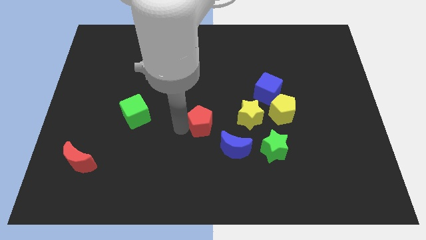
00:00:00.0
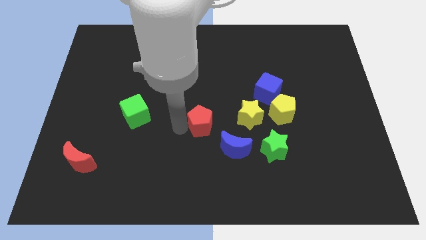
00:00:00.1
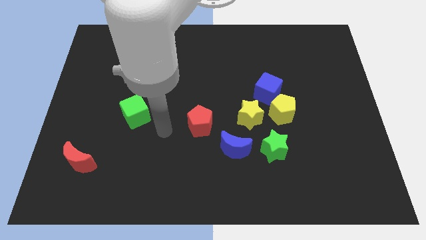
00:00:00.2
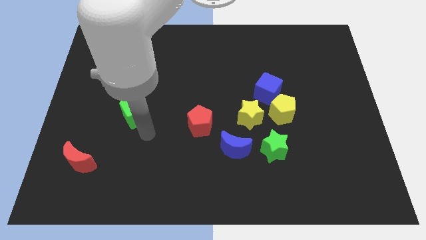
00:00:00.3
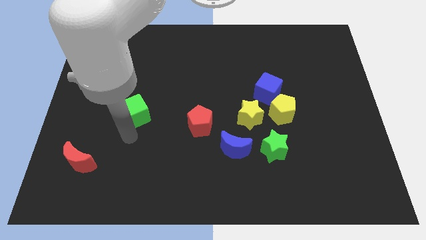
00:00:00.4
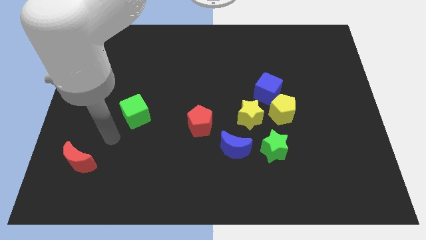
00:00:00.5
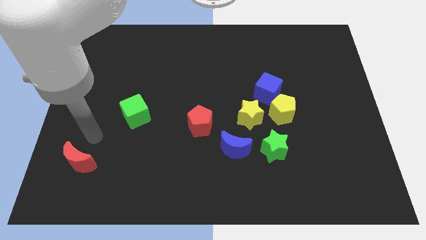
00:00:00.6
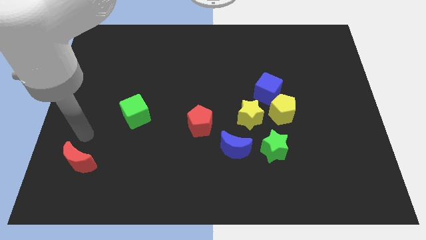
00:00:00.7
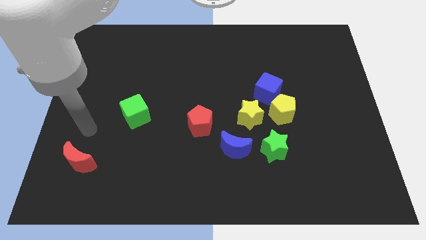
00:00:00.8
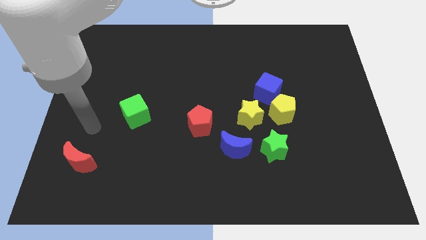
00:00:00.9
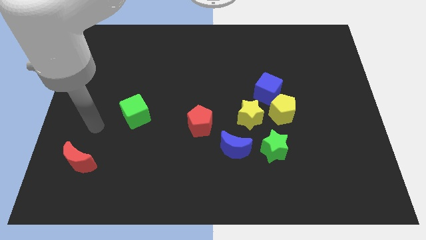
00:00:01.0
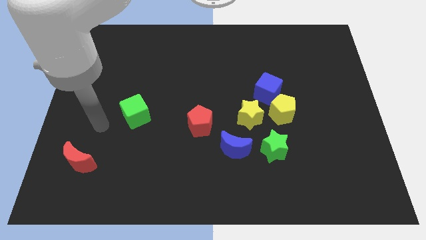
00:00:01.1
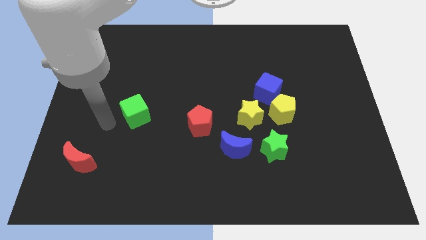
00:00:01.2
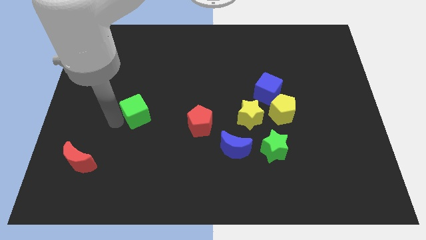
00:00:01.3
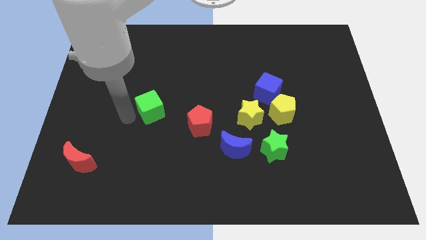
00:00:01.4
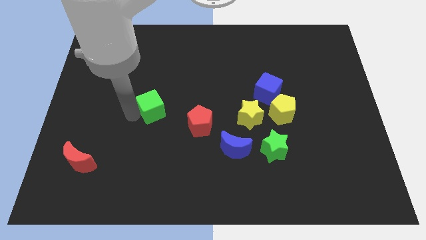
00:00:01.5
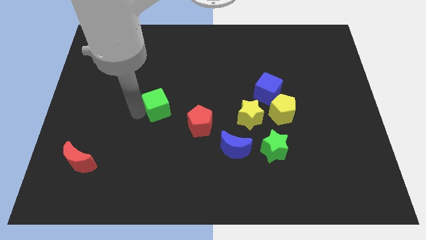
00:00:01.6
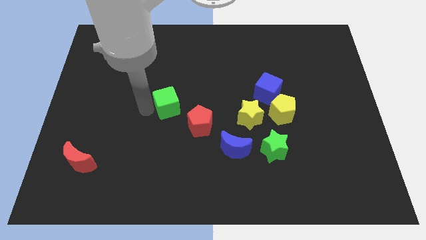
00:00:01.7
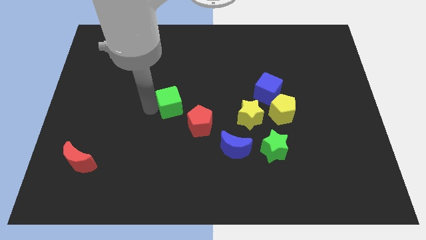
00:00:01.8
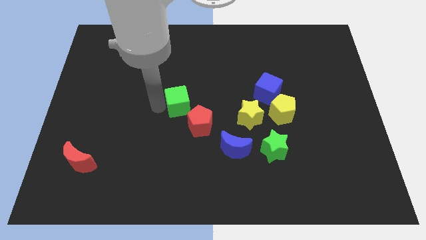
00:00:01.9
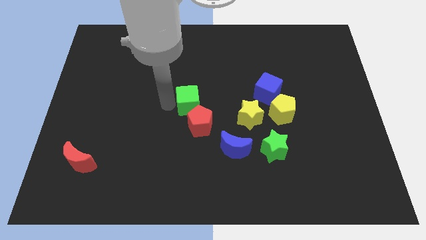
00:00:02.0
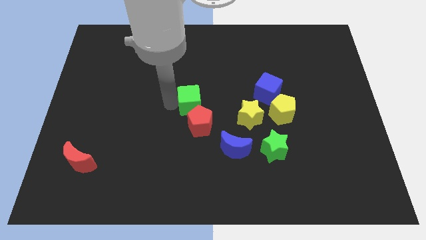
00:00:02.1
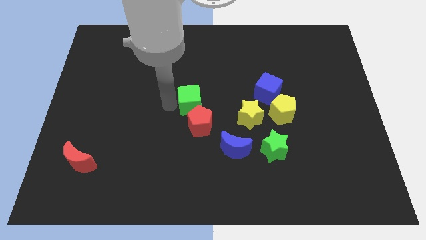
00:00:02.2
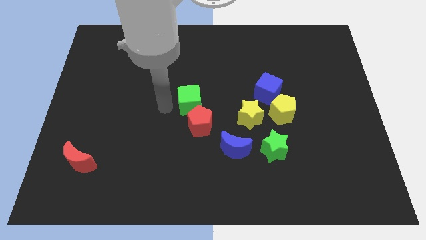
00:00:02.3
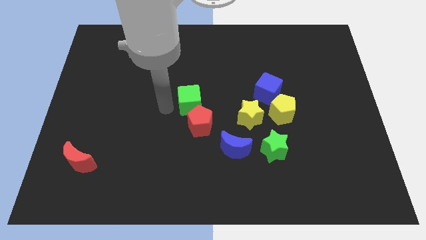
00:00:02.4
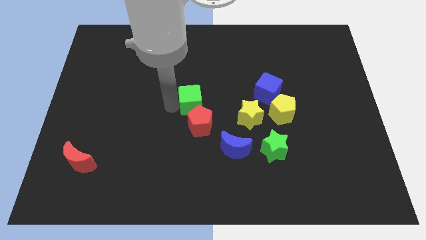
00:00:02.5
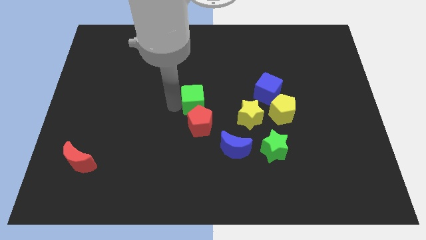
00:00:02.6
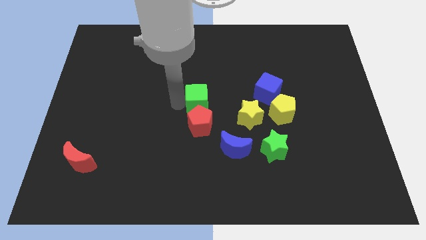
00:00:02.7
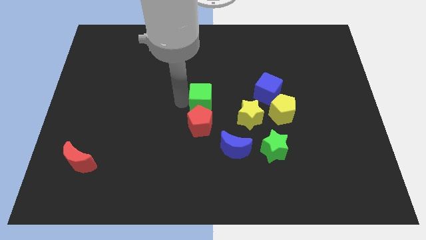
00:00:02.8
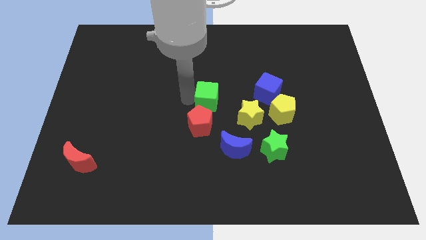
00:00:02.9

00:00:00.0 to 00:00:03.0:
place green cube above red pentagon

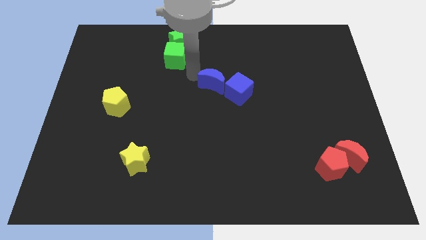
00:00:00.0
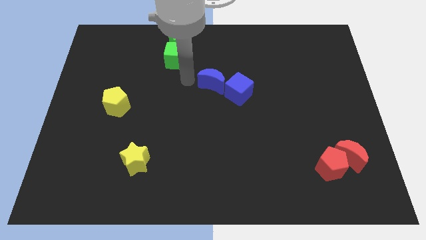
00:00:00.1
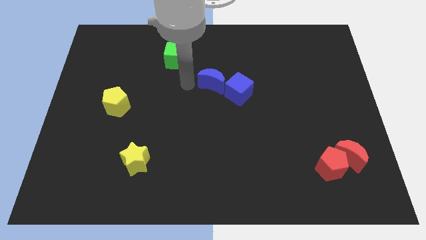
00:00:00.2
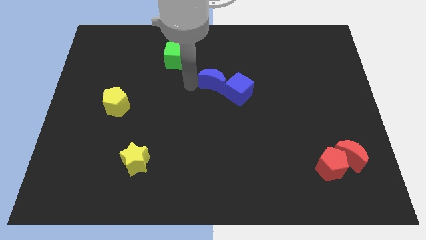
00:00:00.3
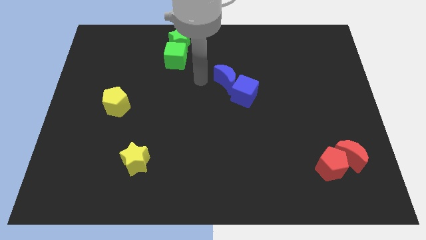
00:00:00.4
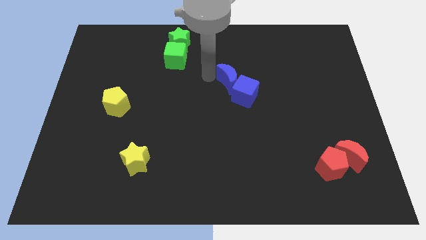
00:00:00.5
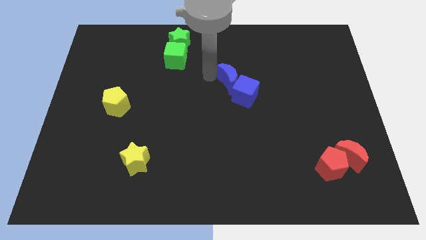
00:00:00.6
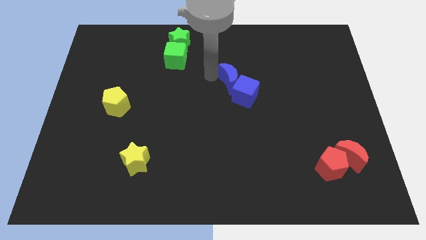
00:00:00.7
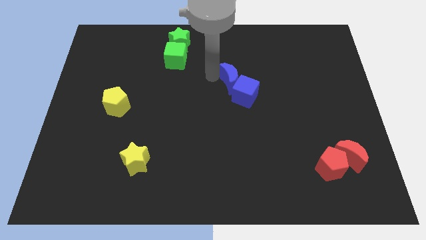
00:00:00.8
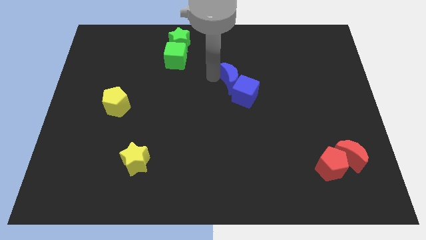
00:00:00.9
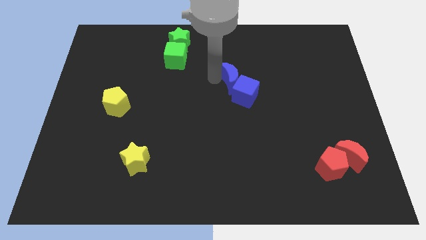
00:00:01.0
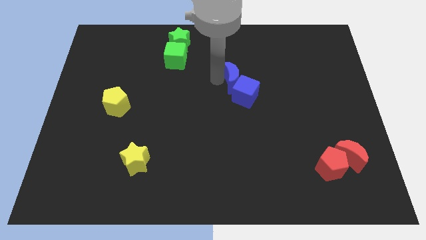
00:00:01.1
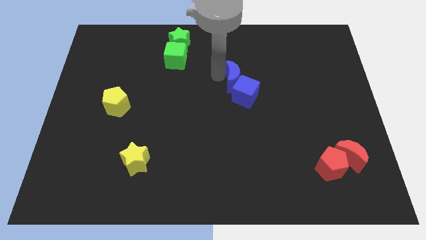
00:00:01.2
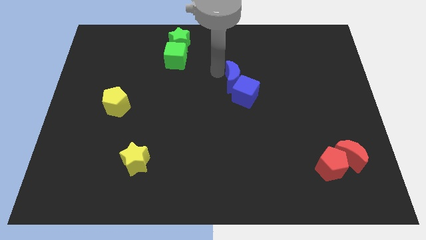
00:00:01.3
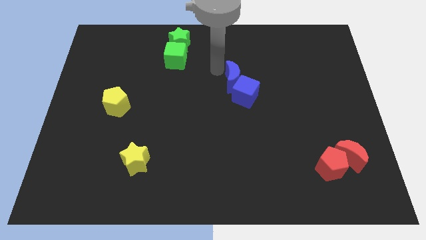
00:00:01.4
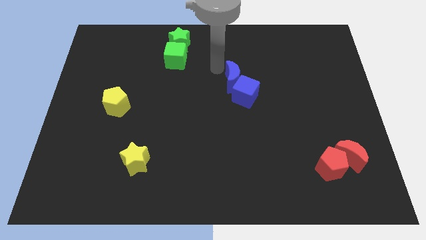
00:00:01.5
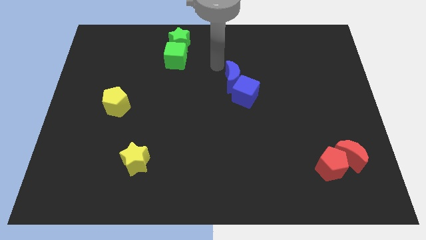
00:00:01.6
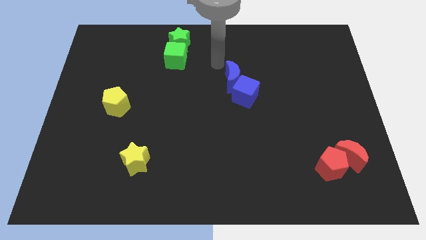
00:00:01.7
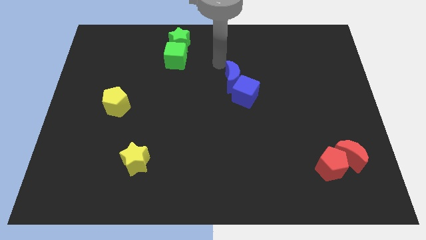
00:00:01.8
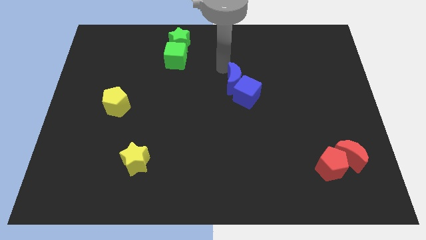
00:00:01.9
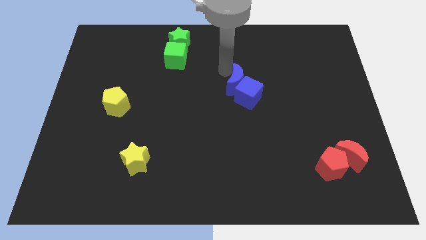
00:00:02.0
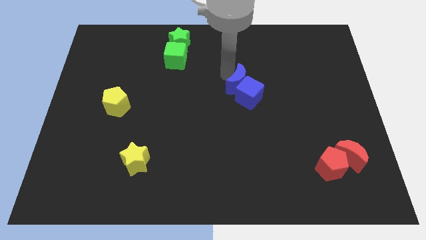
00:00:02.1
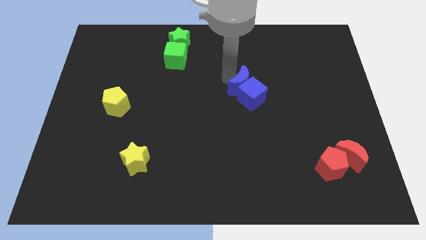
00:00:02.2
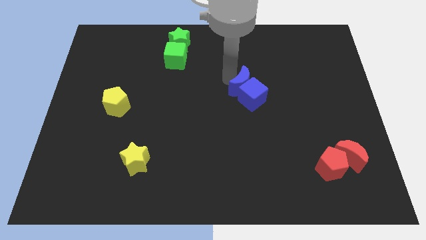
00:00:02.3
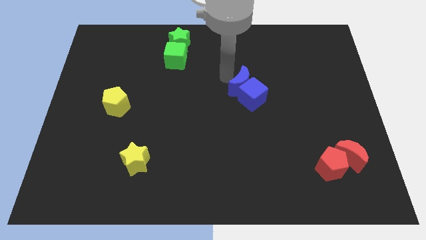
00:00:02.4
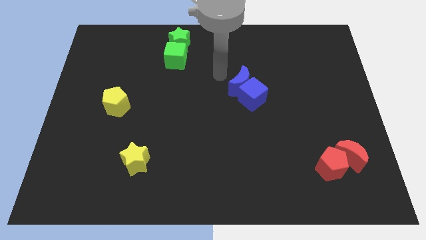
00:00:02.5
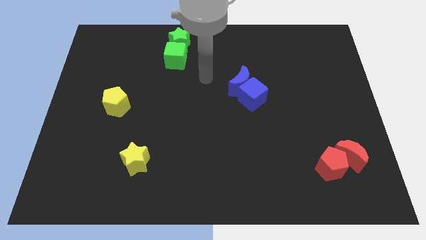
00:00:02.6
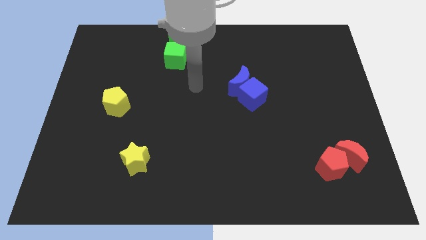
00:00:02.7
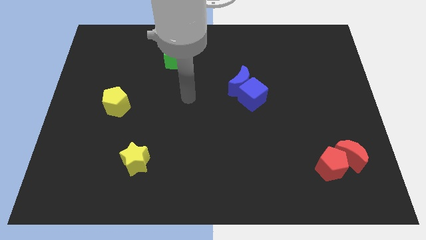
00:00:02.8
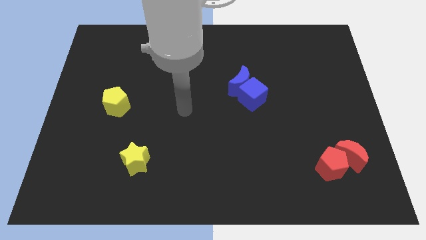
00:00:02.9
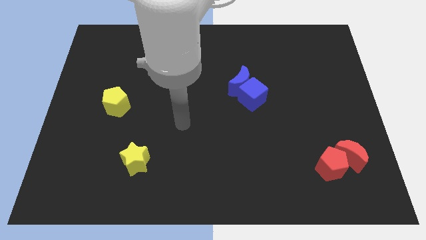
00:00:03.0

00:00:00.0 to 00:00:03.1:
move the group of blue blocks slightly to the down

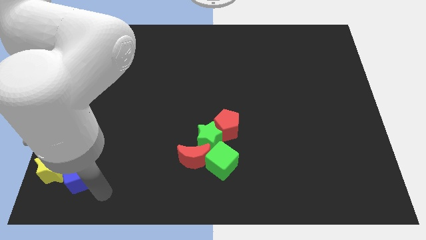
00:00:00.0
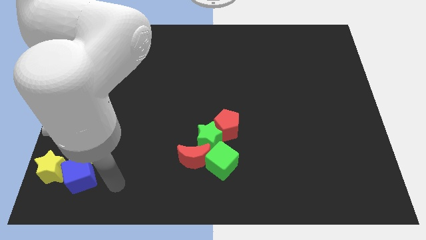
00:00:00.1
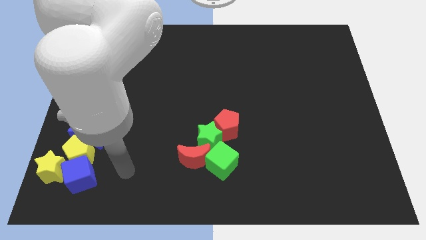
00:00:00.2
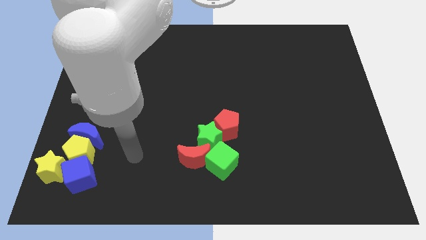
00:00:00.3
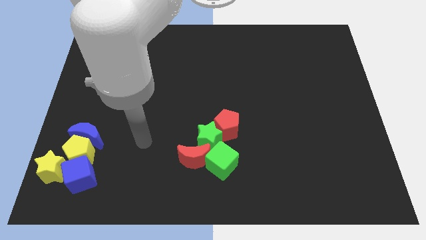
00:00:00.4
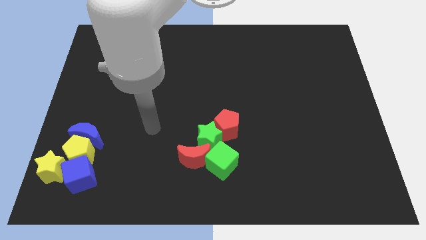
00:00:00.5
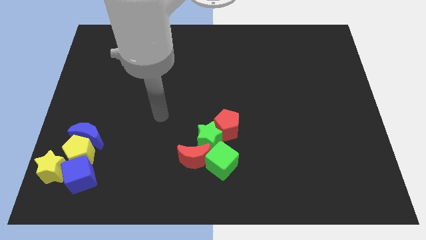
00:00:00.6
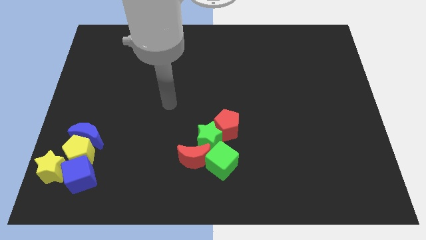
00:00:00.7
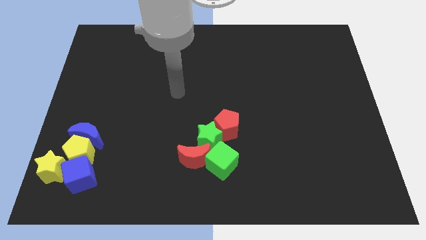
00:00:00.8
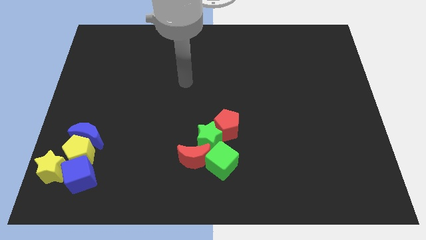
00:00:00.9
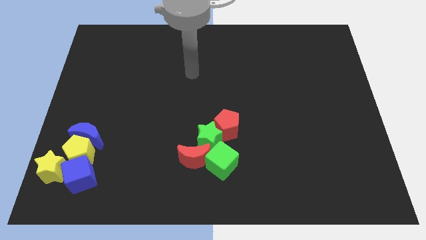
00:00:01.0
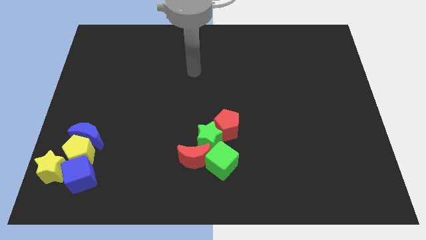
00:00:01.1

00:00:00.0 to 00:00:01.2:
move your arm to the center of the board

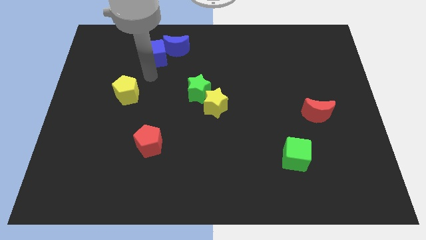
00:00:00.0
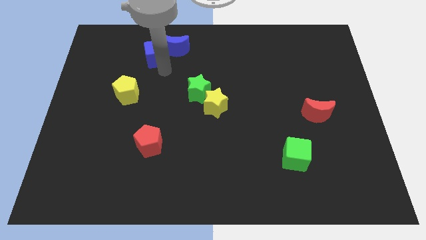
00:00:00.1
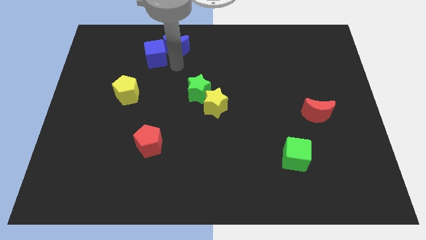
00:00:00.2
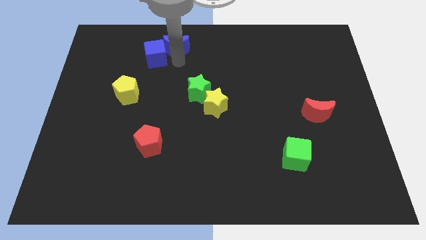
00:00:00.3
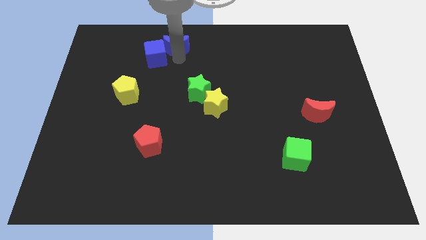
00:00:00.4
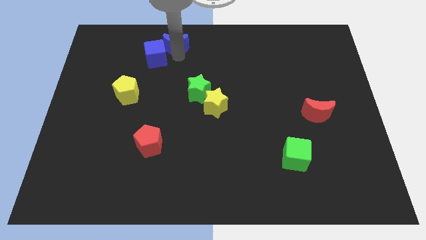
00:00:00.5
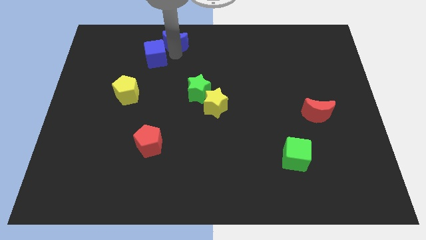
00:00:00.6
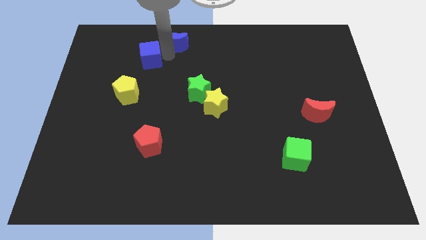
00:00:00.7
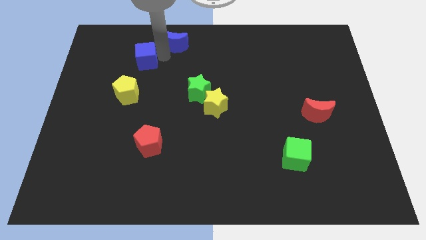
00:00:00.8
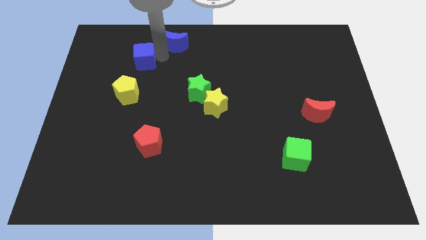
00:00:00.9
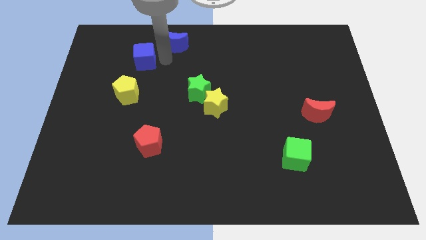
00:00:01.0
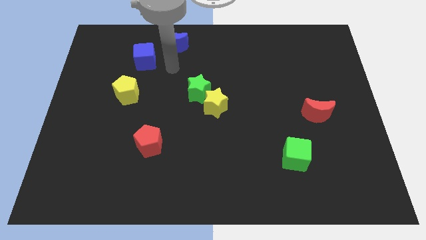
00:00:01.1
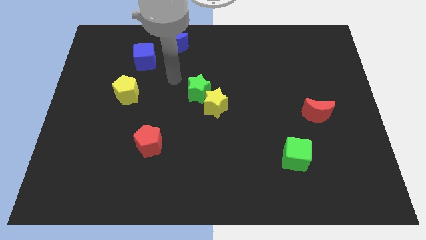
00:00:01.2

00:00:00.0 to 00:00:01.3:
move blue cube slightly along with blue crescent

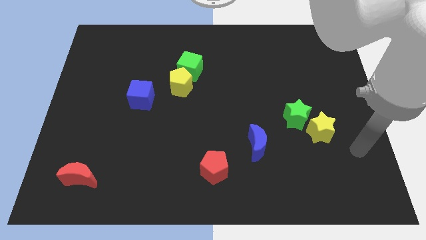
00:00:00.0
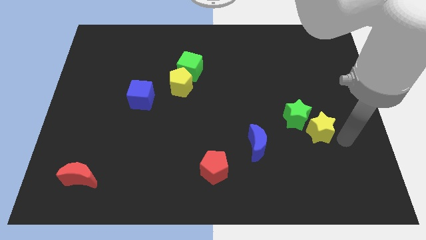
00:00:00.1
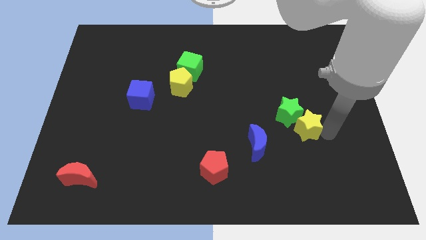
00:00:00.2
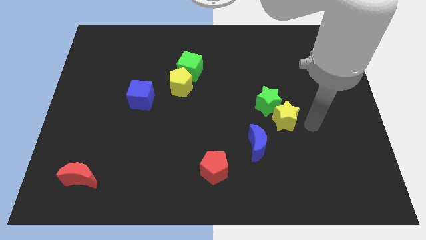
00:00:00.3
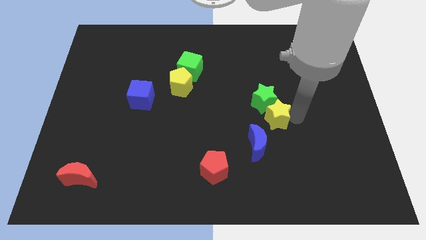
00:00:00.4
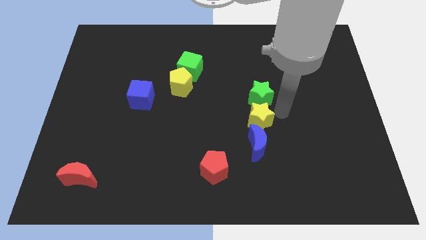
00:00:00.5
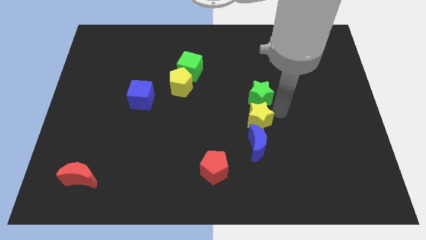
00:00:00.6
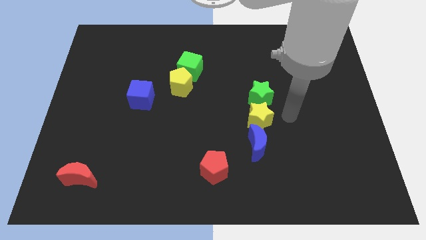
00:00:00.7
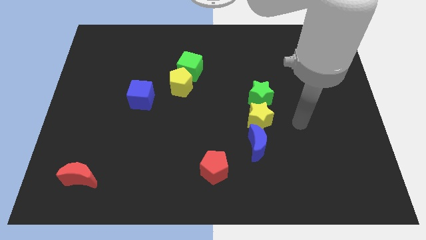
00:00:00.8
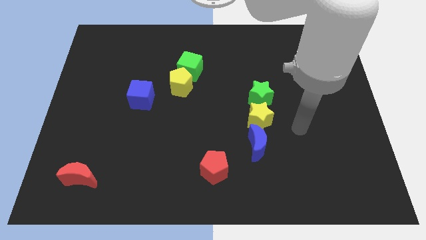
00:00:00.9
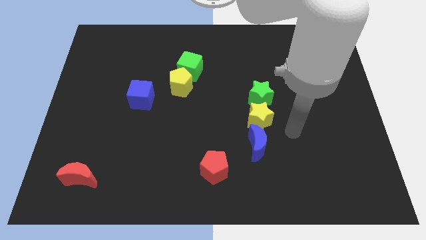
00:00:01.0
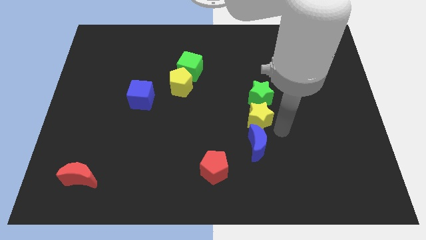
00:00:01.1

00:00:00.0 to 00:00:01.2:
push yellow and green stars together on top of blue moon
